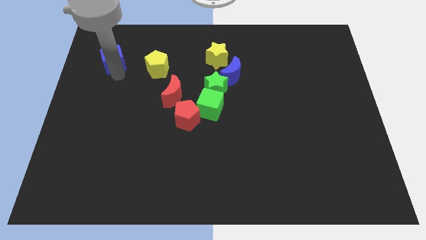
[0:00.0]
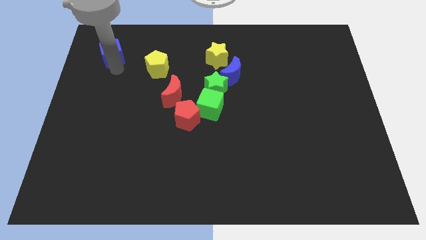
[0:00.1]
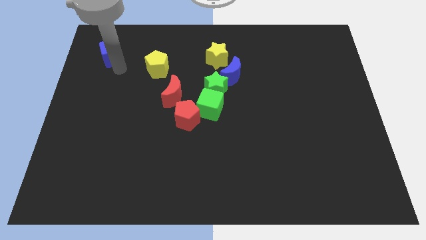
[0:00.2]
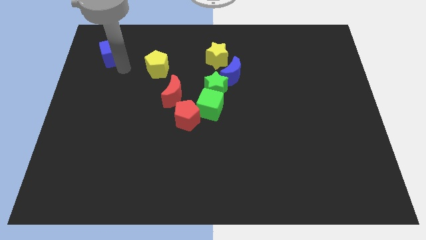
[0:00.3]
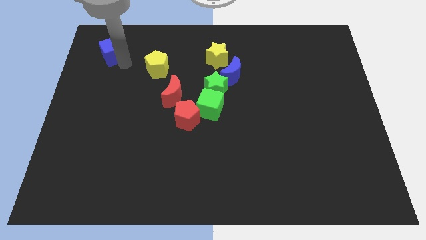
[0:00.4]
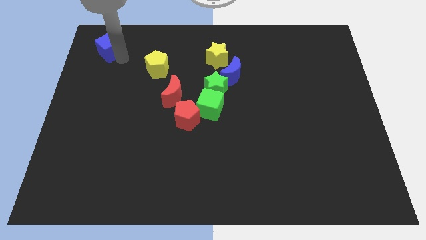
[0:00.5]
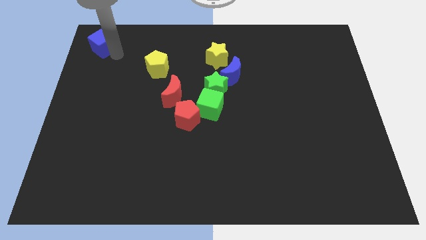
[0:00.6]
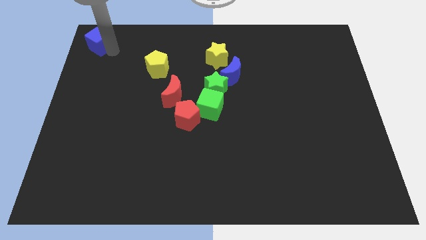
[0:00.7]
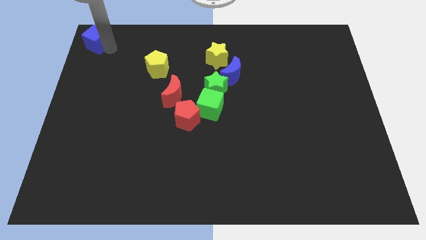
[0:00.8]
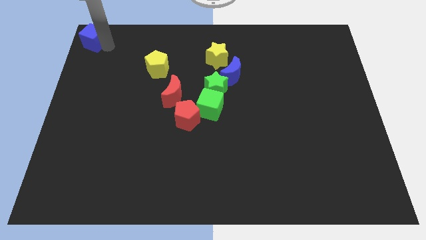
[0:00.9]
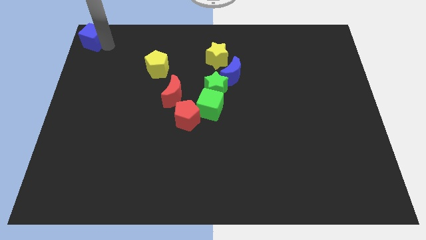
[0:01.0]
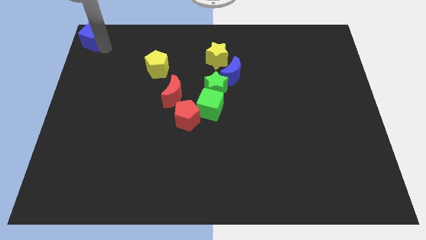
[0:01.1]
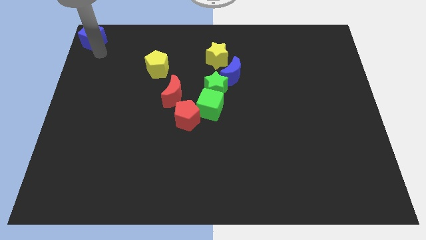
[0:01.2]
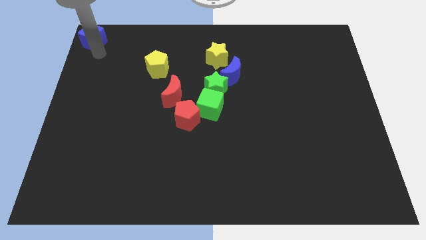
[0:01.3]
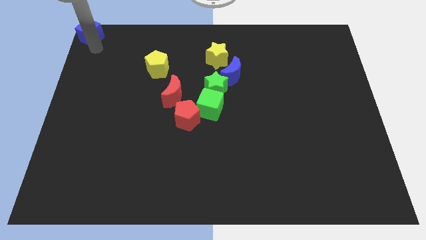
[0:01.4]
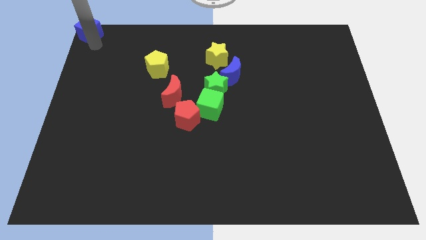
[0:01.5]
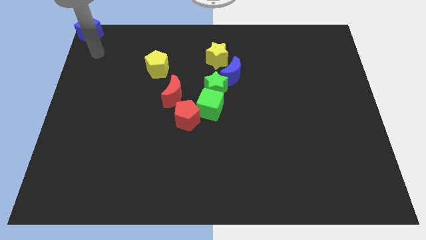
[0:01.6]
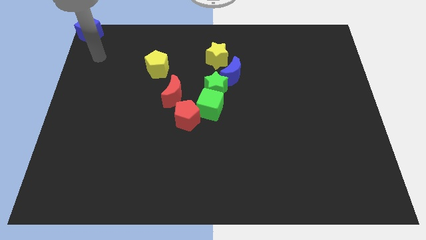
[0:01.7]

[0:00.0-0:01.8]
move the blue cube to the top left corner of the board

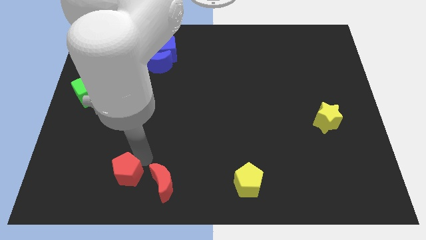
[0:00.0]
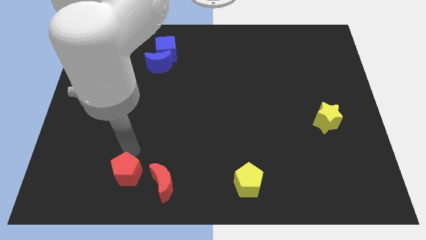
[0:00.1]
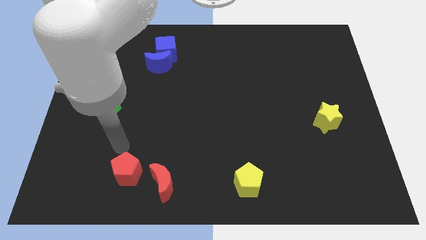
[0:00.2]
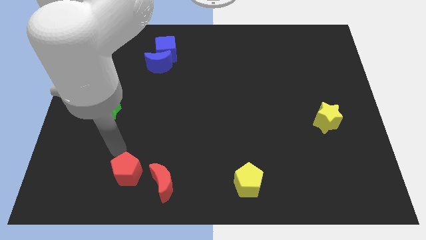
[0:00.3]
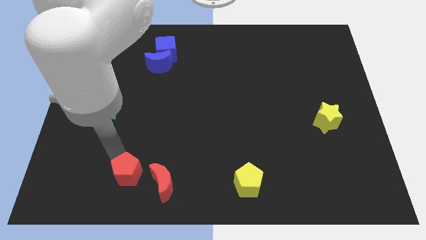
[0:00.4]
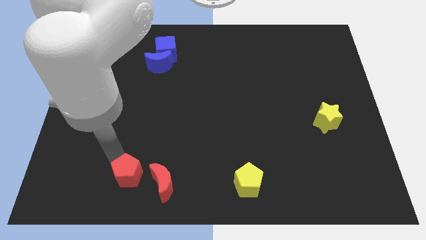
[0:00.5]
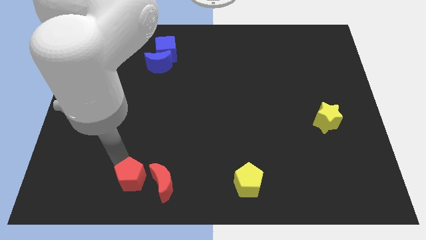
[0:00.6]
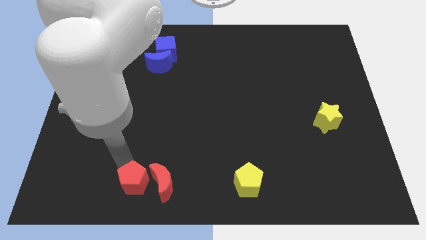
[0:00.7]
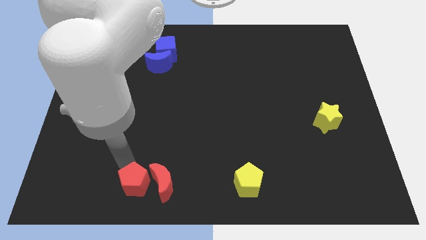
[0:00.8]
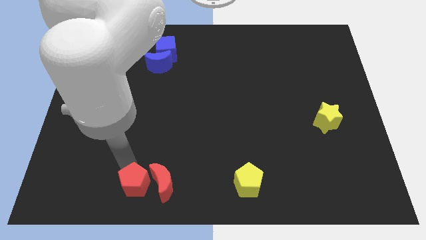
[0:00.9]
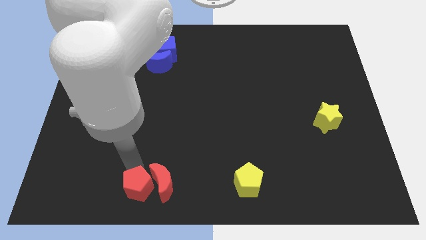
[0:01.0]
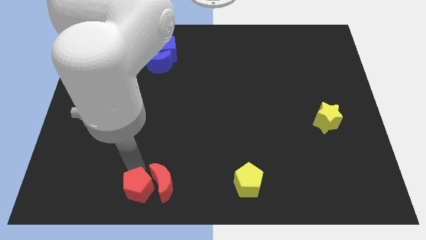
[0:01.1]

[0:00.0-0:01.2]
move the red pentagon left to the red crescent

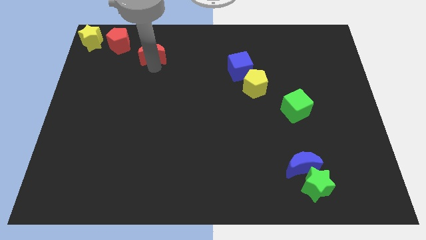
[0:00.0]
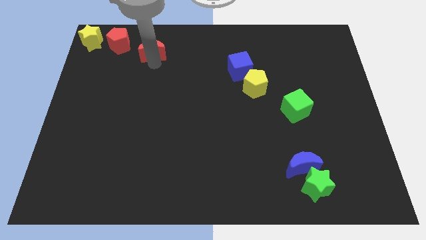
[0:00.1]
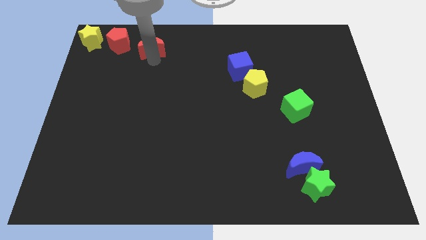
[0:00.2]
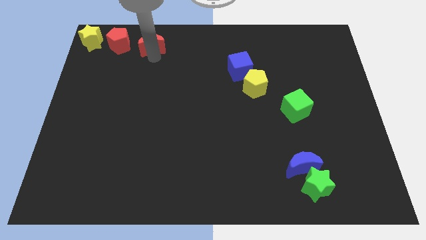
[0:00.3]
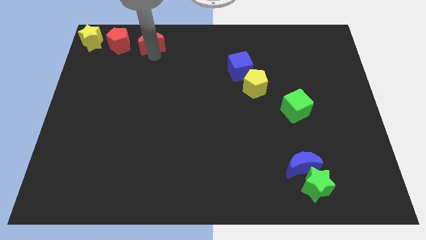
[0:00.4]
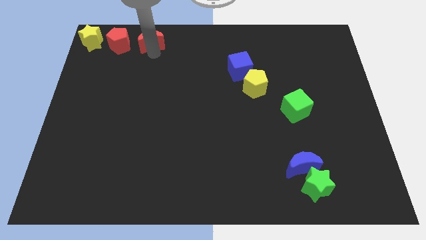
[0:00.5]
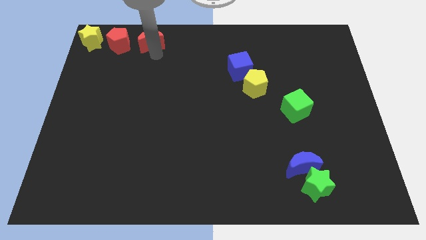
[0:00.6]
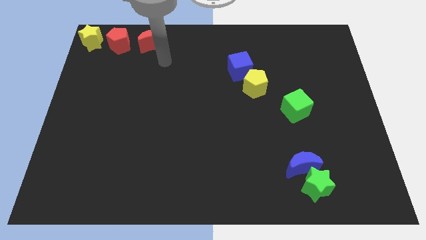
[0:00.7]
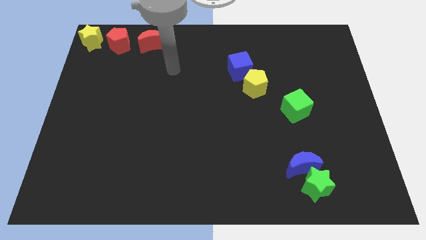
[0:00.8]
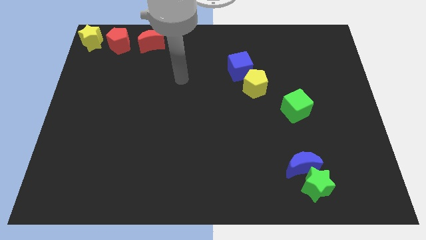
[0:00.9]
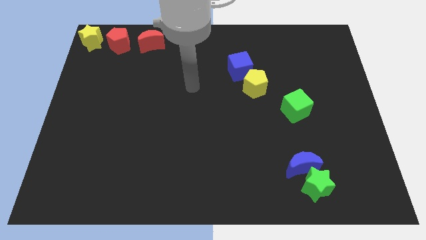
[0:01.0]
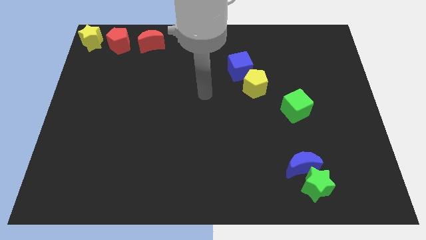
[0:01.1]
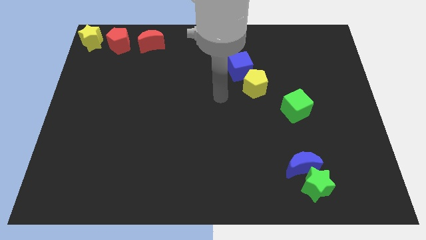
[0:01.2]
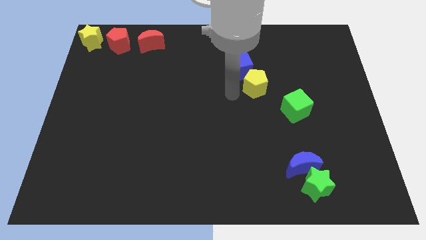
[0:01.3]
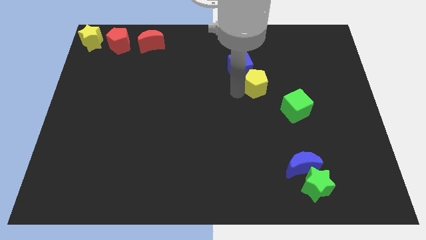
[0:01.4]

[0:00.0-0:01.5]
put the red moon to the right of the red pentagon

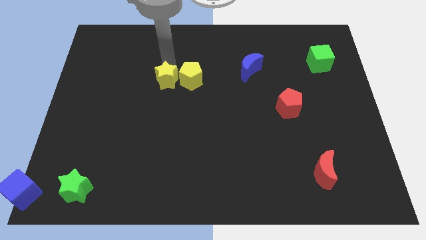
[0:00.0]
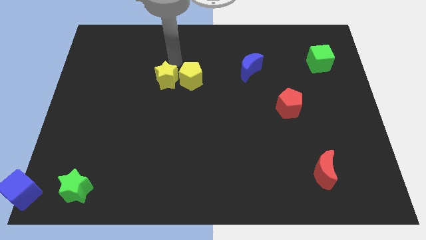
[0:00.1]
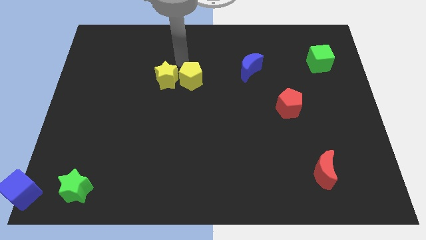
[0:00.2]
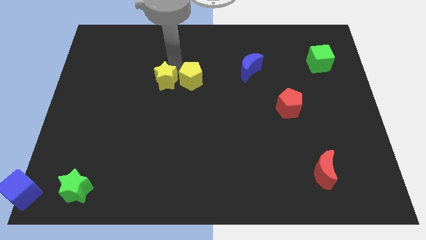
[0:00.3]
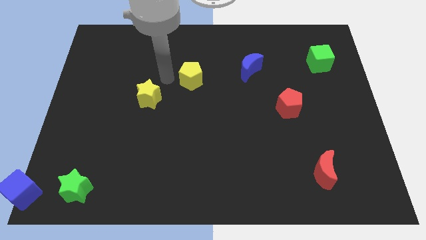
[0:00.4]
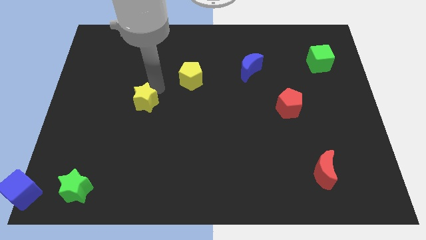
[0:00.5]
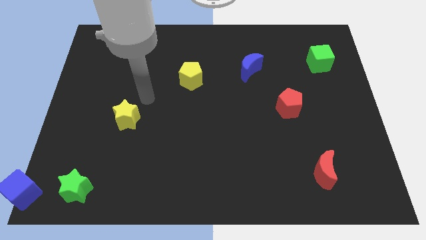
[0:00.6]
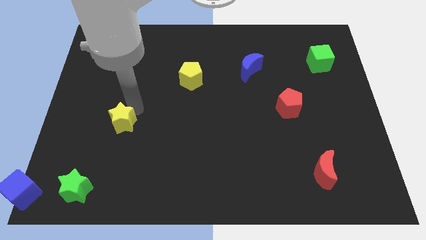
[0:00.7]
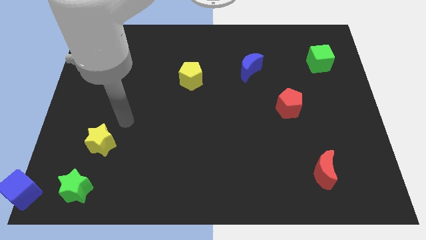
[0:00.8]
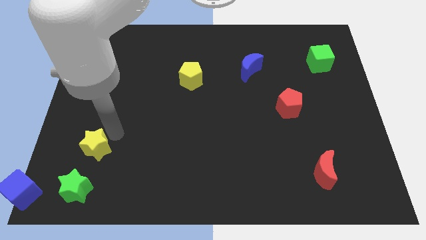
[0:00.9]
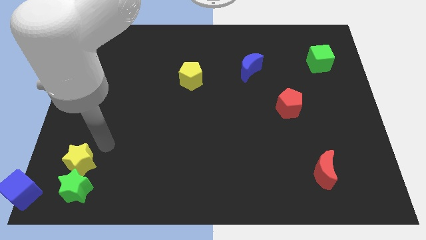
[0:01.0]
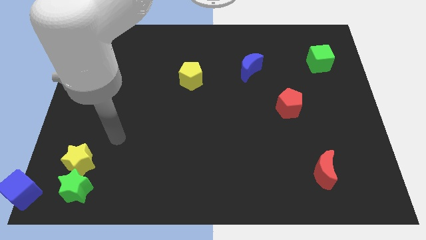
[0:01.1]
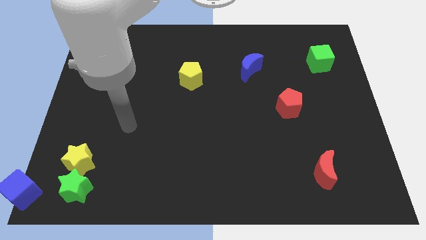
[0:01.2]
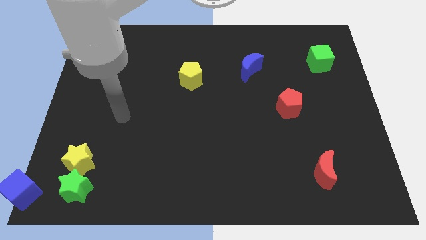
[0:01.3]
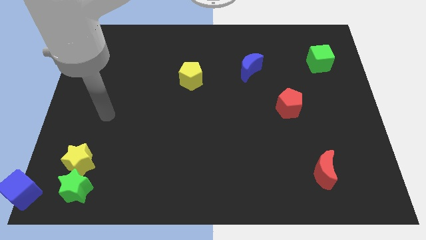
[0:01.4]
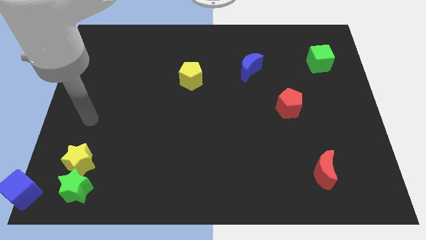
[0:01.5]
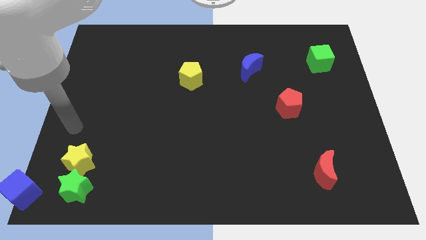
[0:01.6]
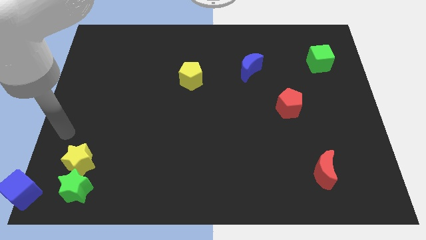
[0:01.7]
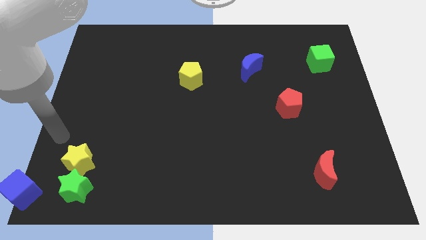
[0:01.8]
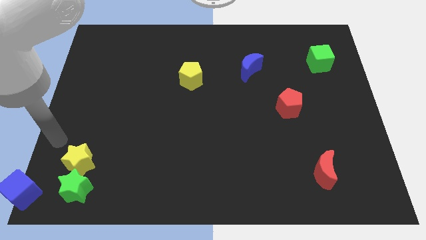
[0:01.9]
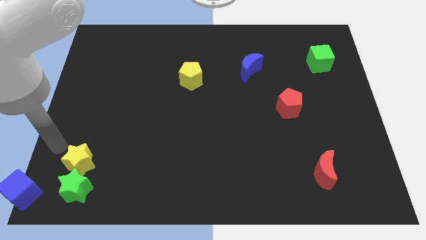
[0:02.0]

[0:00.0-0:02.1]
slide yellow star on top of green star

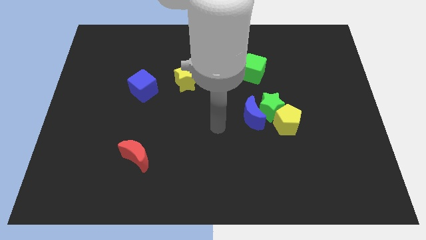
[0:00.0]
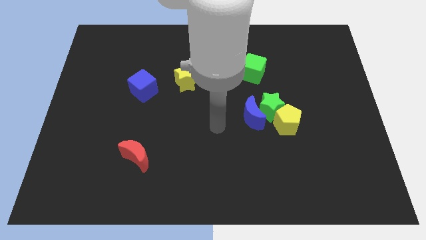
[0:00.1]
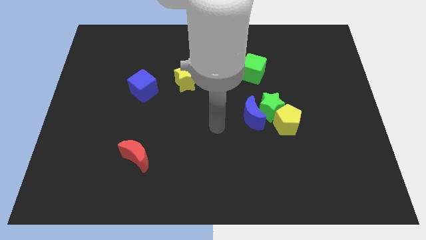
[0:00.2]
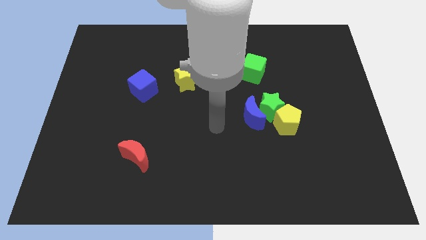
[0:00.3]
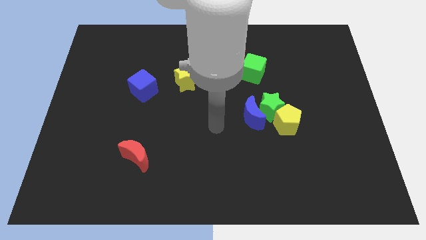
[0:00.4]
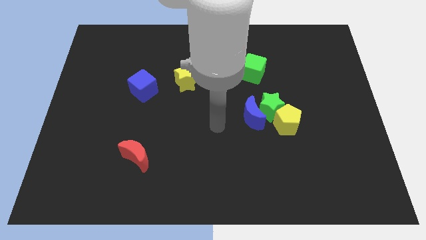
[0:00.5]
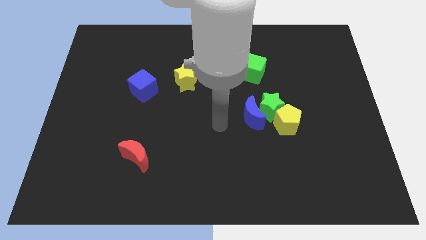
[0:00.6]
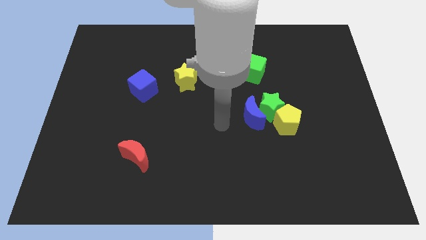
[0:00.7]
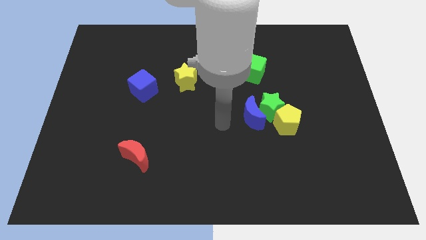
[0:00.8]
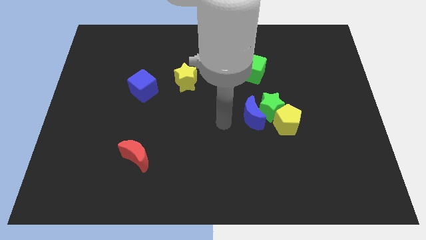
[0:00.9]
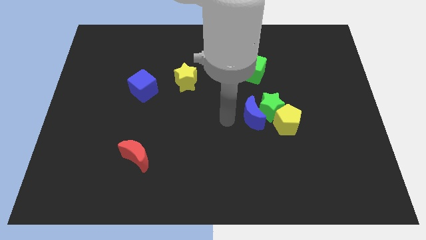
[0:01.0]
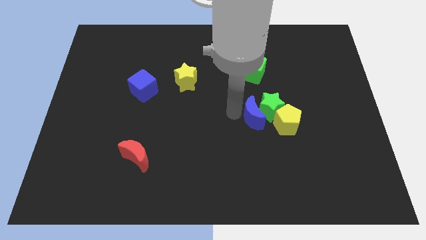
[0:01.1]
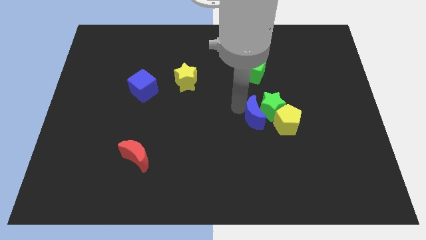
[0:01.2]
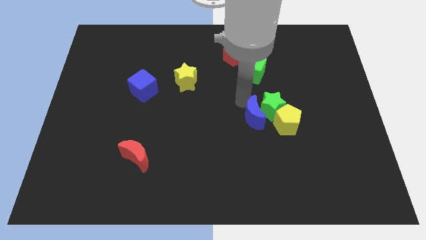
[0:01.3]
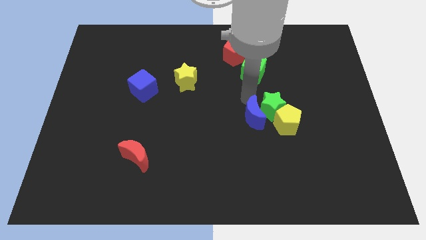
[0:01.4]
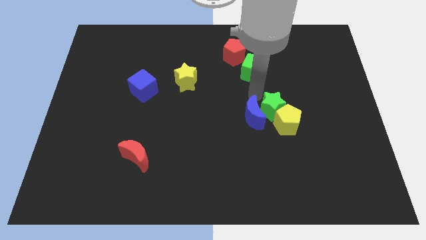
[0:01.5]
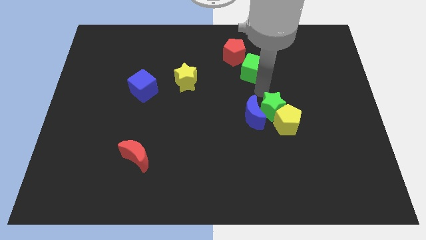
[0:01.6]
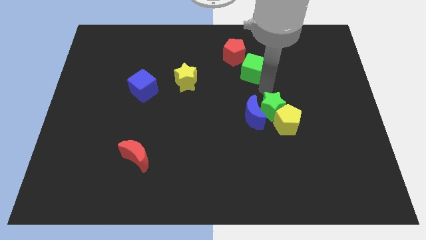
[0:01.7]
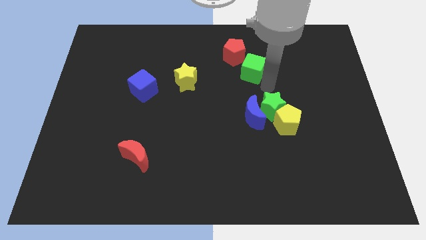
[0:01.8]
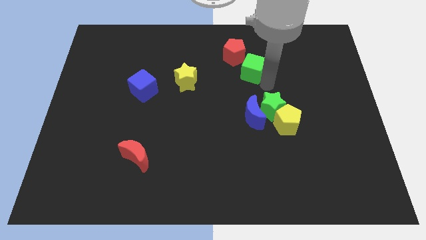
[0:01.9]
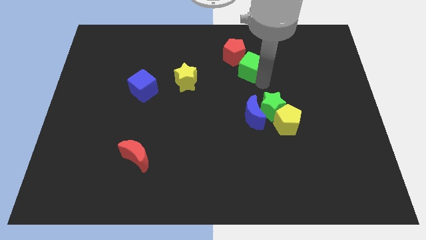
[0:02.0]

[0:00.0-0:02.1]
slightly push the green cube towards the red pentagon
